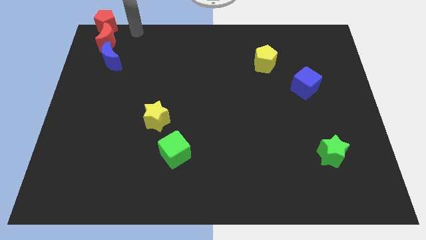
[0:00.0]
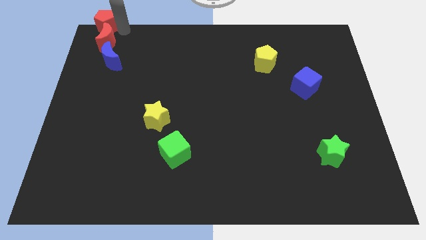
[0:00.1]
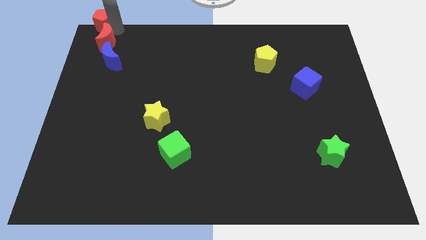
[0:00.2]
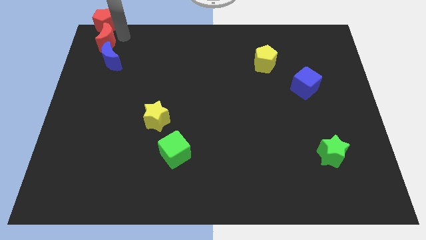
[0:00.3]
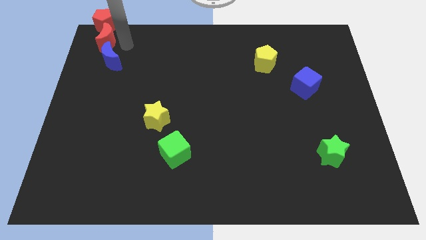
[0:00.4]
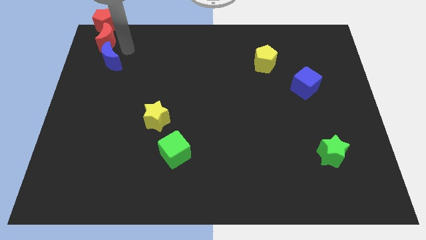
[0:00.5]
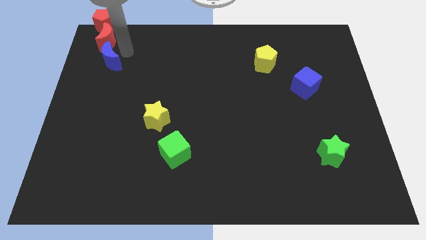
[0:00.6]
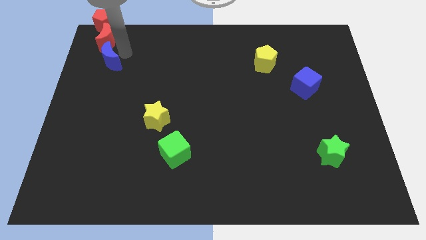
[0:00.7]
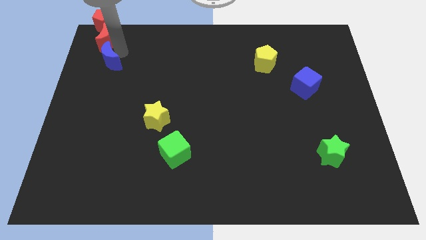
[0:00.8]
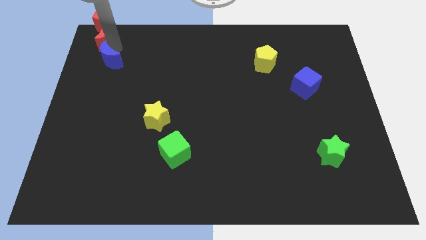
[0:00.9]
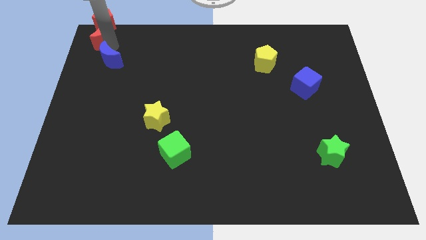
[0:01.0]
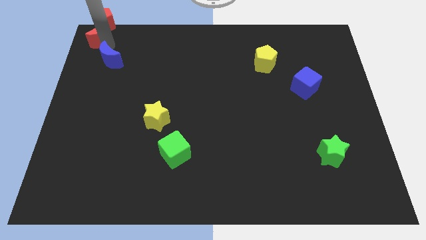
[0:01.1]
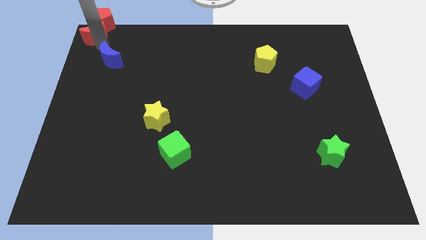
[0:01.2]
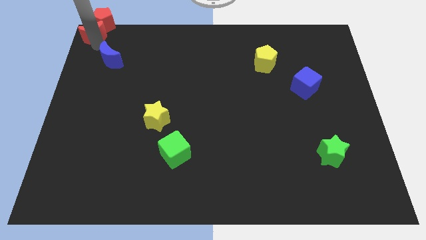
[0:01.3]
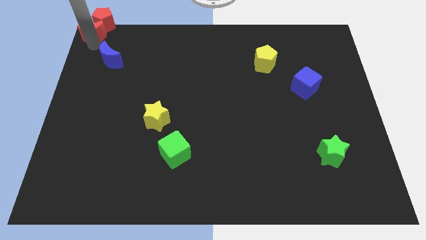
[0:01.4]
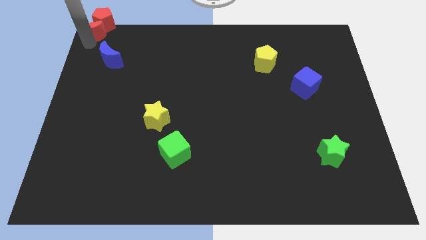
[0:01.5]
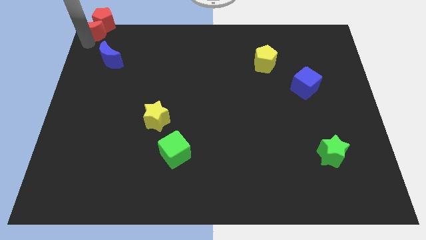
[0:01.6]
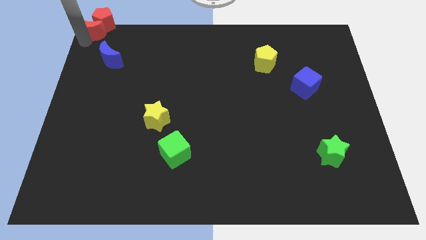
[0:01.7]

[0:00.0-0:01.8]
move the red blocks to top left corner

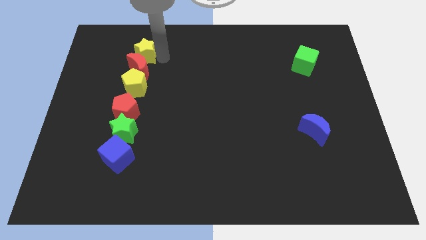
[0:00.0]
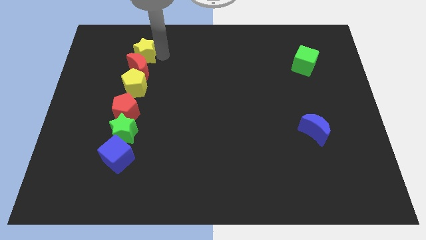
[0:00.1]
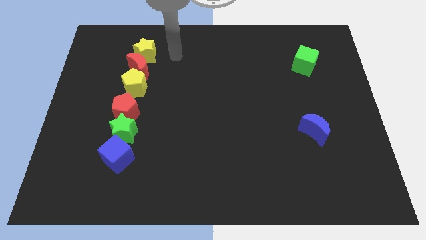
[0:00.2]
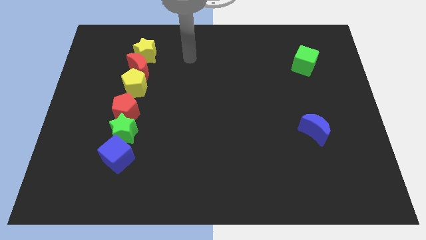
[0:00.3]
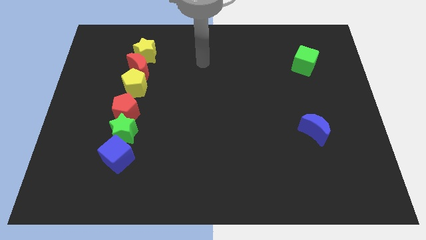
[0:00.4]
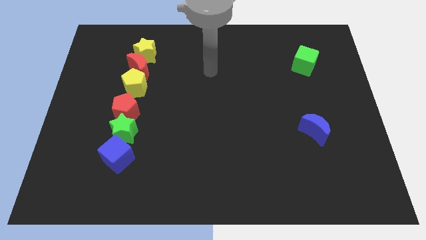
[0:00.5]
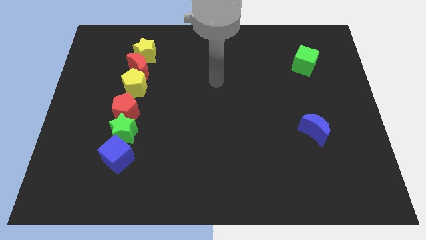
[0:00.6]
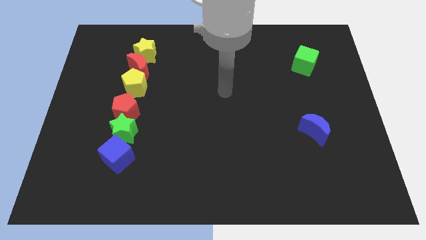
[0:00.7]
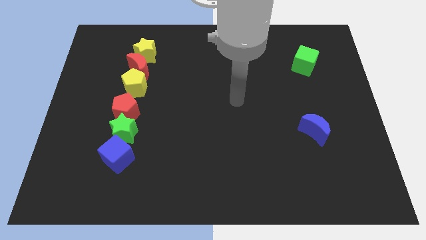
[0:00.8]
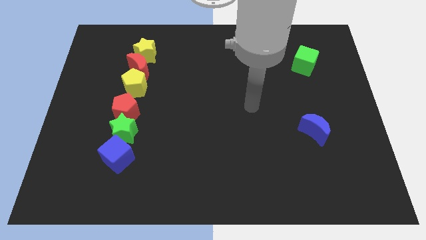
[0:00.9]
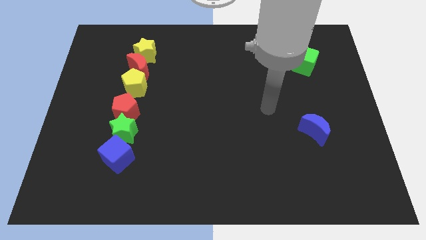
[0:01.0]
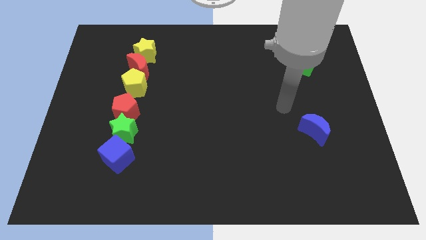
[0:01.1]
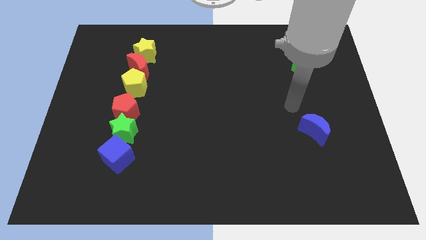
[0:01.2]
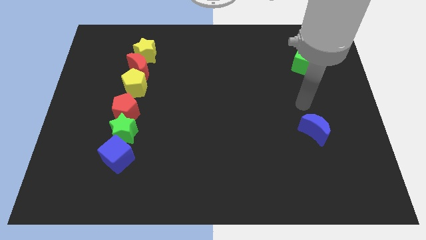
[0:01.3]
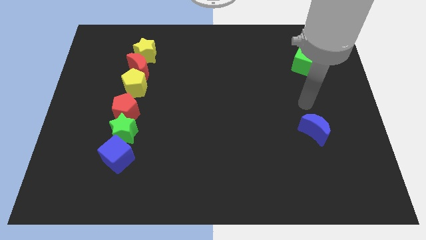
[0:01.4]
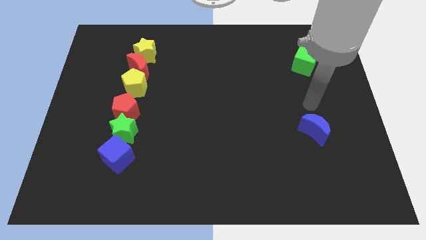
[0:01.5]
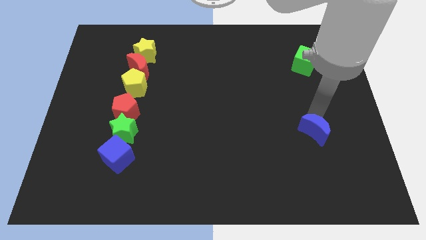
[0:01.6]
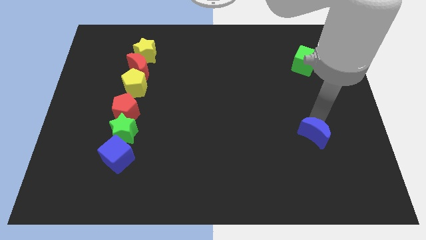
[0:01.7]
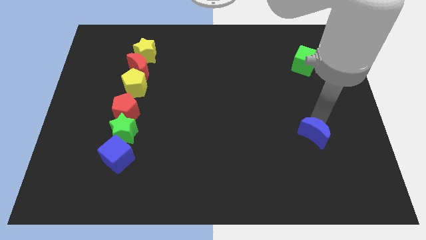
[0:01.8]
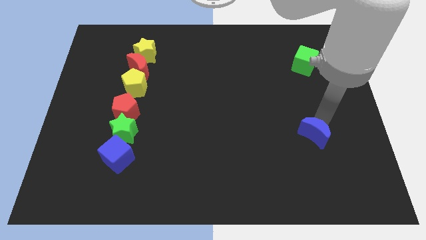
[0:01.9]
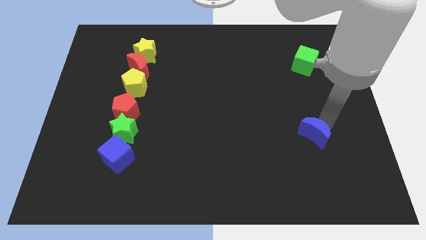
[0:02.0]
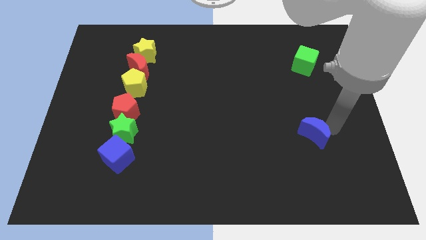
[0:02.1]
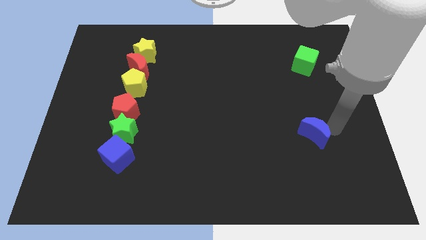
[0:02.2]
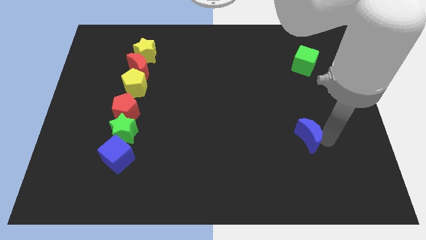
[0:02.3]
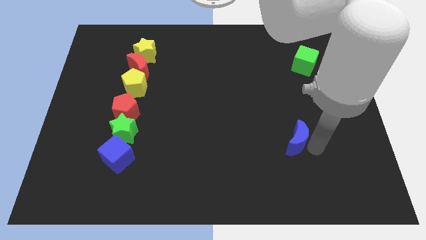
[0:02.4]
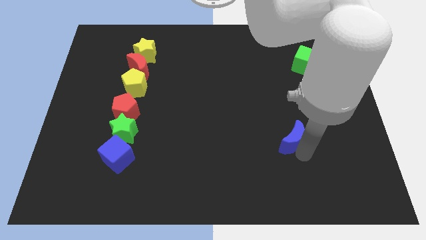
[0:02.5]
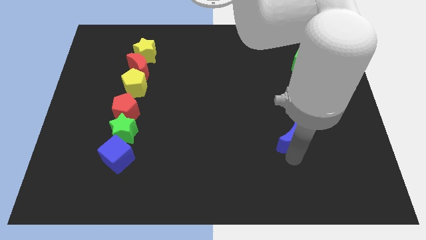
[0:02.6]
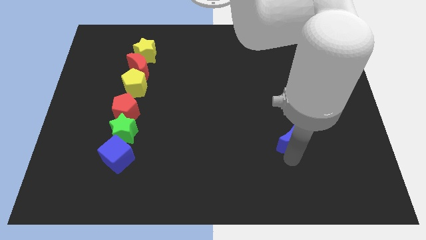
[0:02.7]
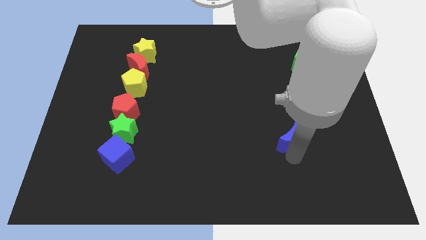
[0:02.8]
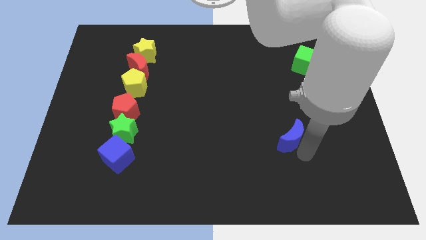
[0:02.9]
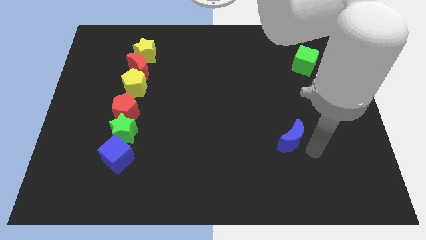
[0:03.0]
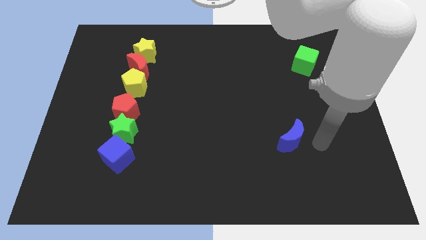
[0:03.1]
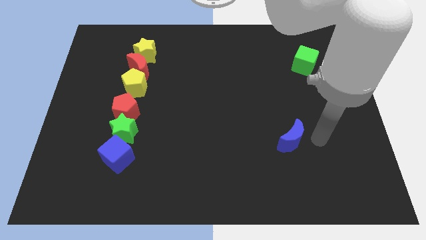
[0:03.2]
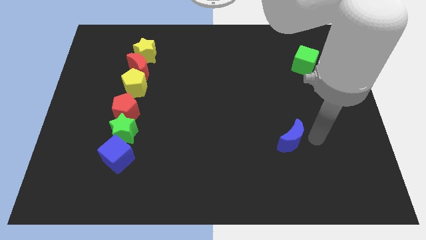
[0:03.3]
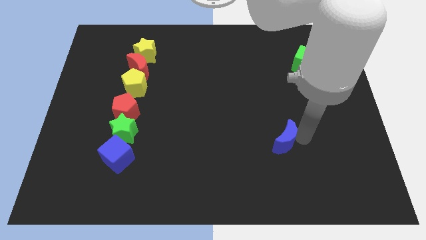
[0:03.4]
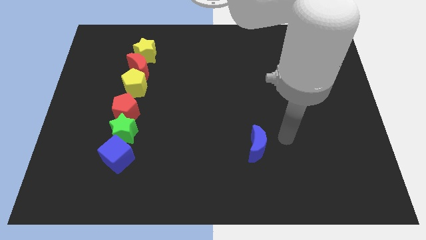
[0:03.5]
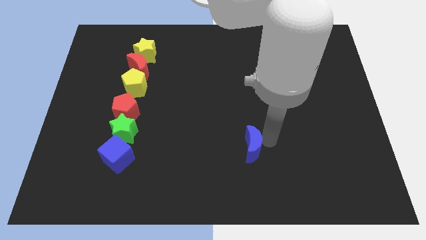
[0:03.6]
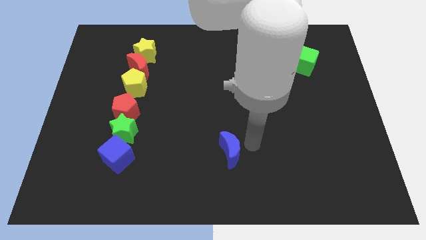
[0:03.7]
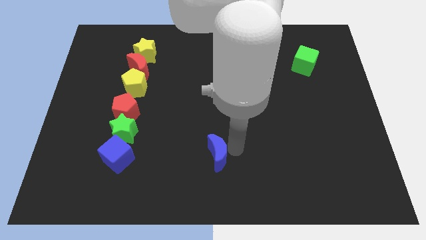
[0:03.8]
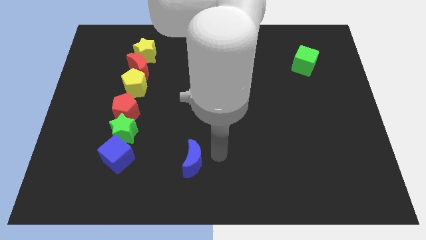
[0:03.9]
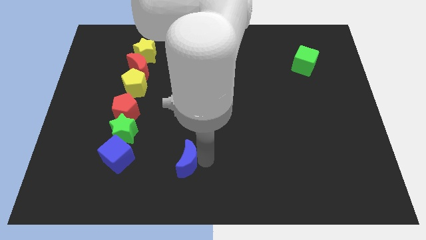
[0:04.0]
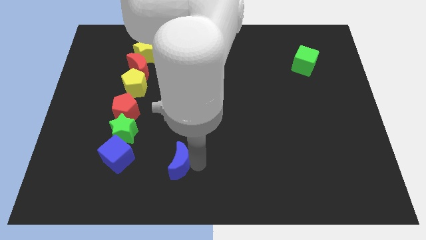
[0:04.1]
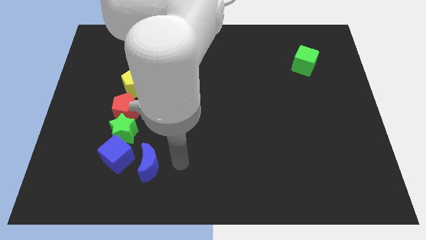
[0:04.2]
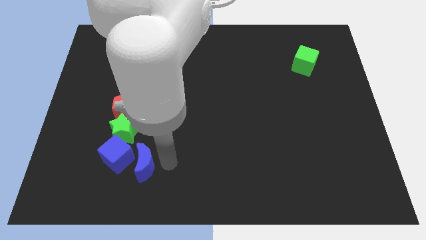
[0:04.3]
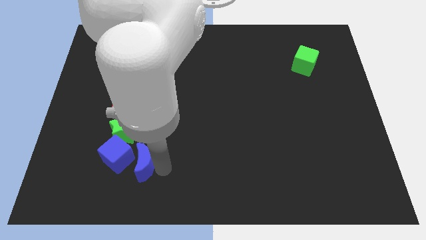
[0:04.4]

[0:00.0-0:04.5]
move the blue crescent to the right of the blue cube

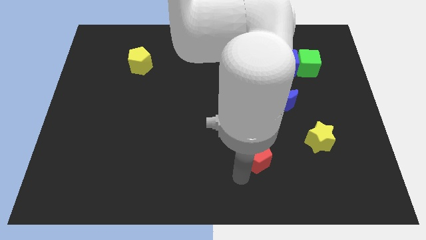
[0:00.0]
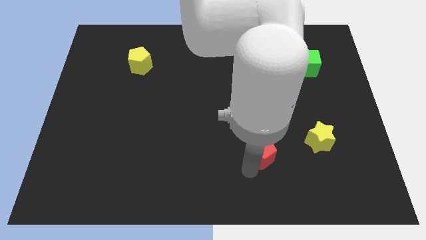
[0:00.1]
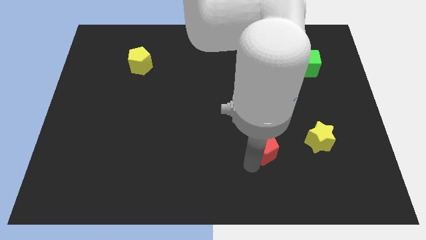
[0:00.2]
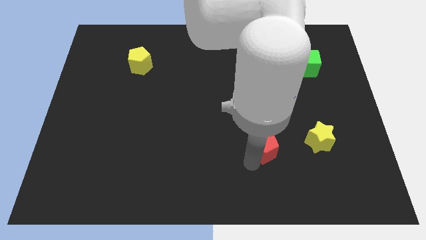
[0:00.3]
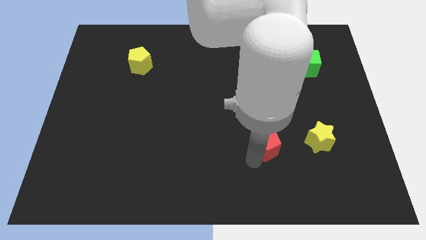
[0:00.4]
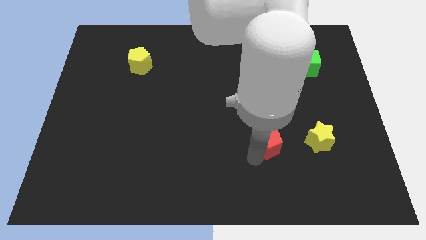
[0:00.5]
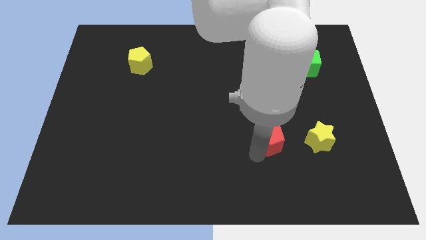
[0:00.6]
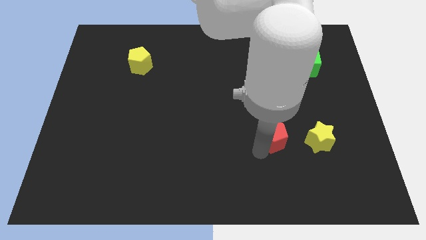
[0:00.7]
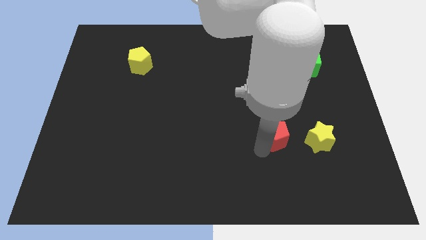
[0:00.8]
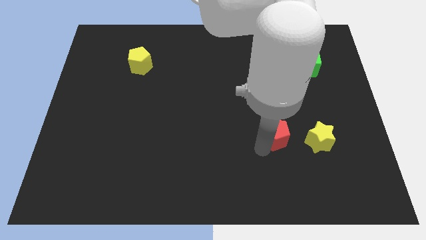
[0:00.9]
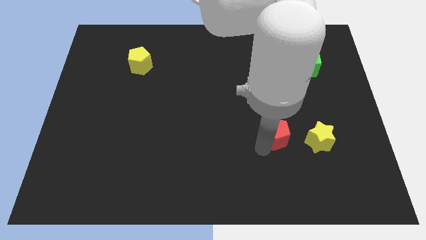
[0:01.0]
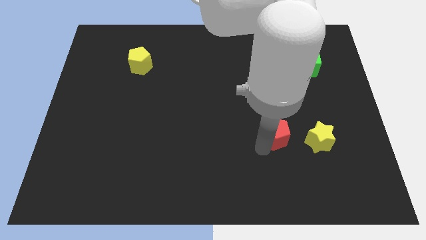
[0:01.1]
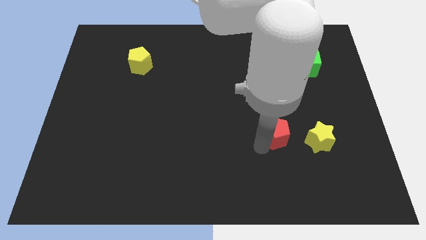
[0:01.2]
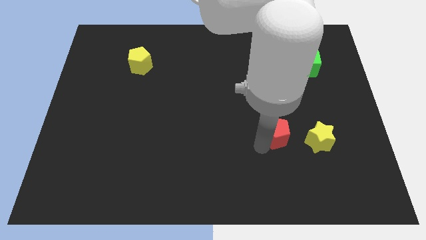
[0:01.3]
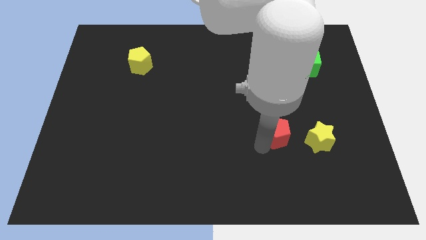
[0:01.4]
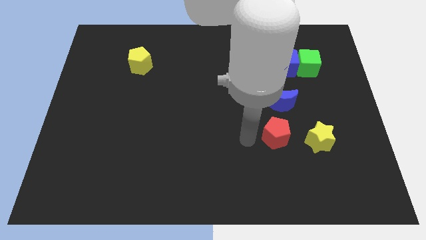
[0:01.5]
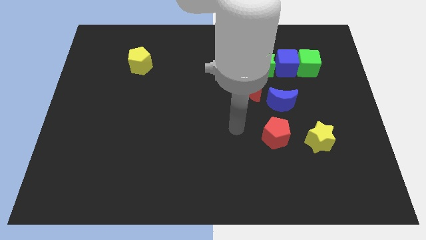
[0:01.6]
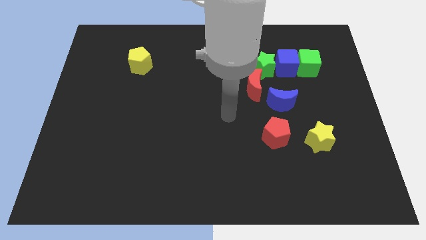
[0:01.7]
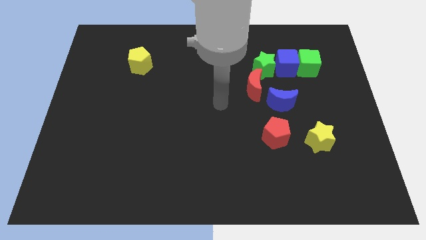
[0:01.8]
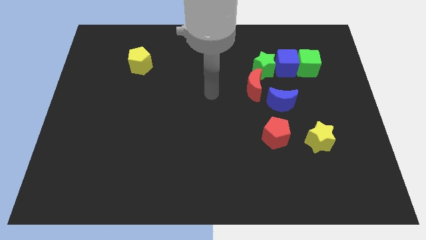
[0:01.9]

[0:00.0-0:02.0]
move the red pentagon to the left of the yellow star

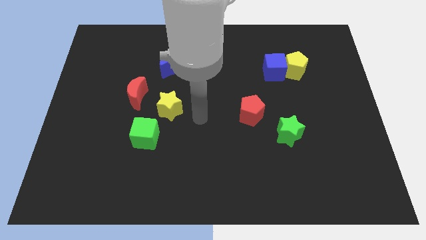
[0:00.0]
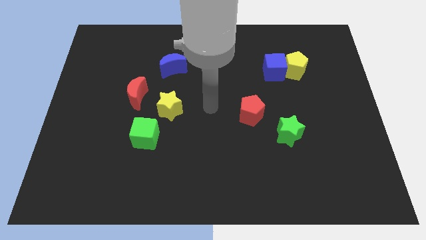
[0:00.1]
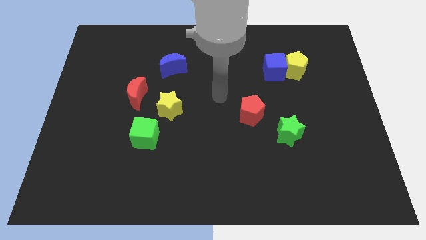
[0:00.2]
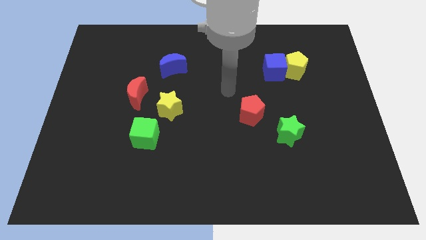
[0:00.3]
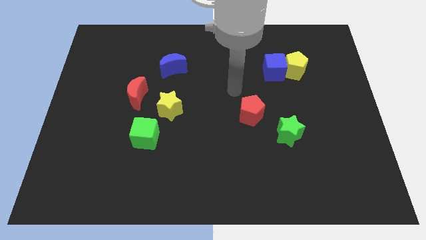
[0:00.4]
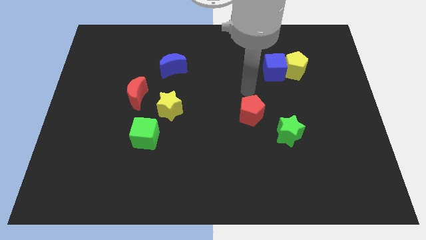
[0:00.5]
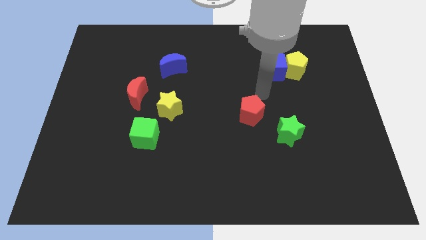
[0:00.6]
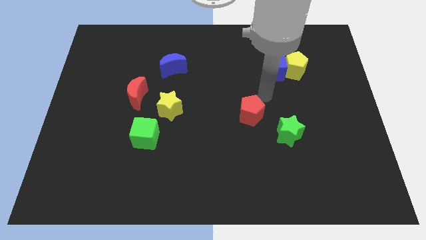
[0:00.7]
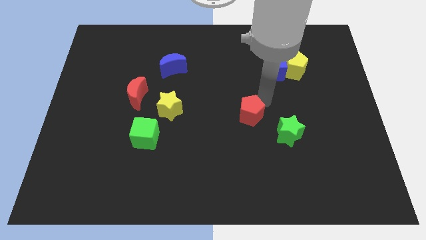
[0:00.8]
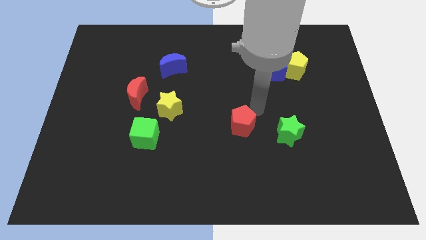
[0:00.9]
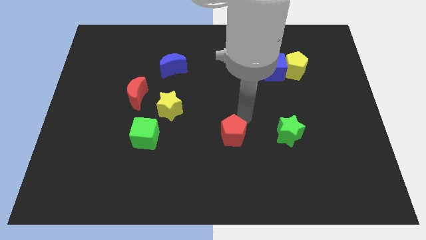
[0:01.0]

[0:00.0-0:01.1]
push the red pentagon to the bottom side
